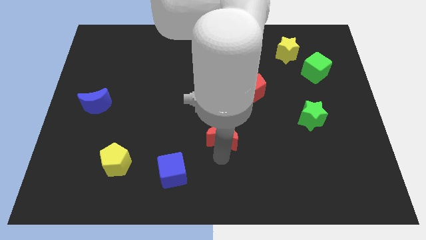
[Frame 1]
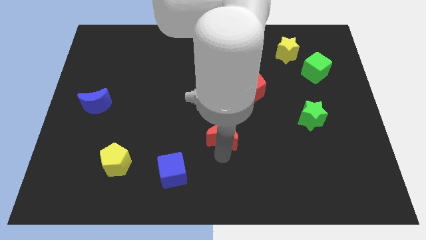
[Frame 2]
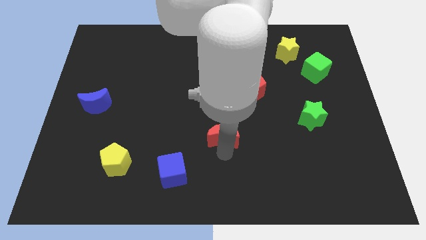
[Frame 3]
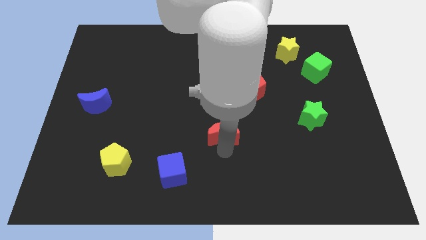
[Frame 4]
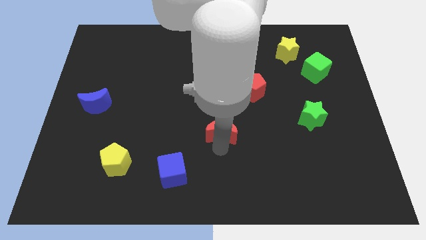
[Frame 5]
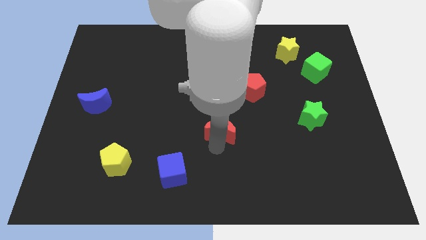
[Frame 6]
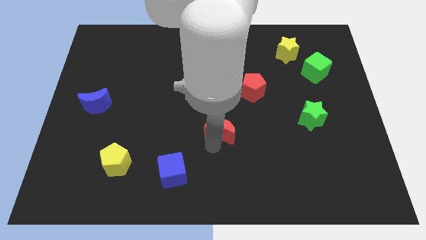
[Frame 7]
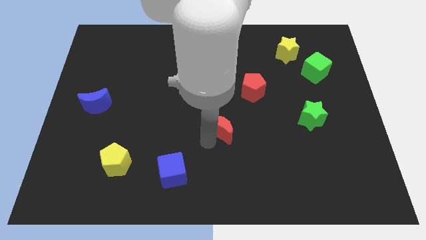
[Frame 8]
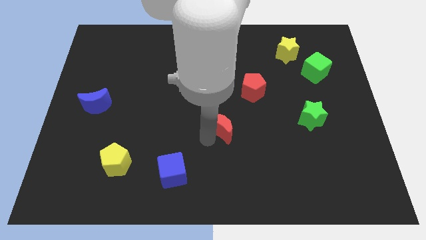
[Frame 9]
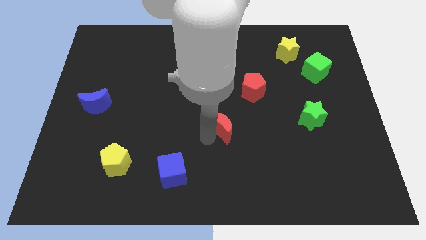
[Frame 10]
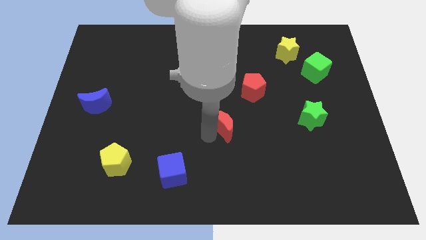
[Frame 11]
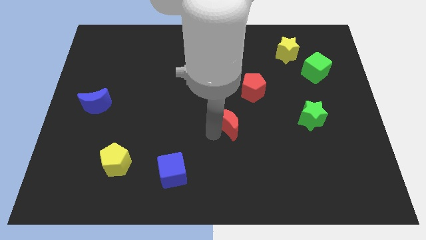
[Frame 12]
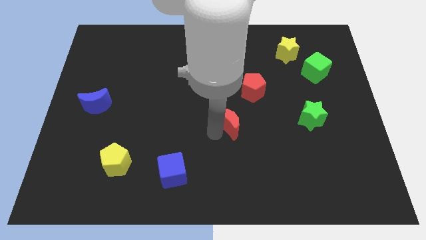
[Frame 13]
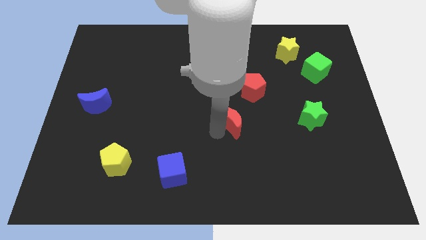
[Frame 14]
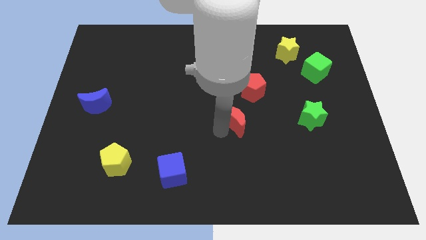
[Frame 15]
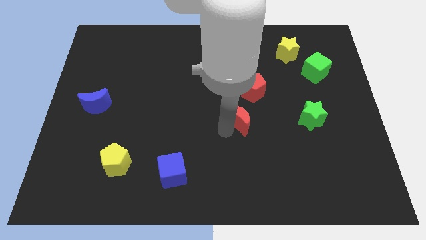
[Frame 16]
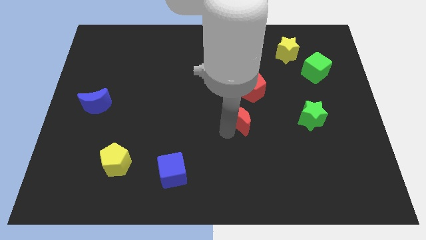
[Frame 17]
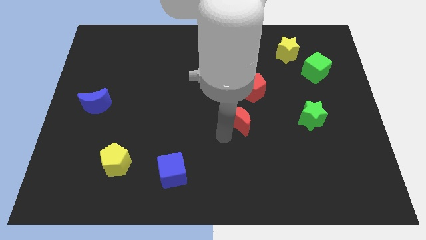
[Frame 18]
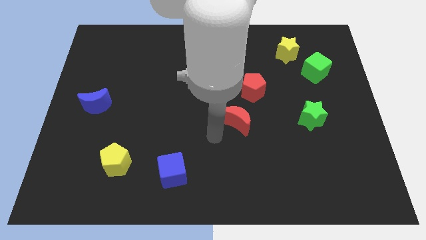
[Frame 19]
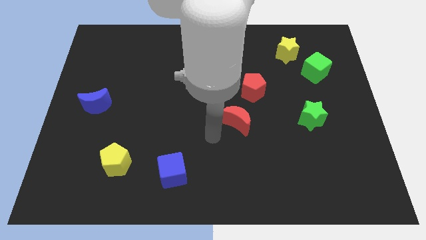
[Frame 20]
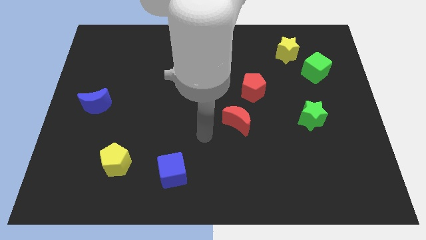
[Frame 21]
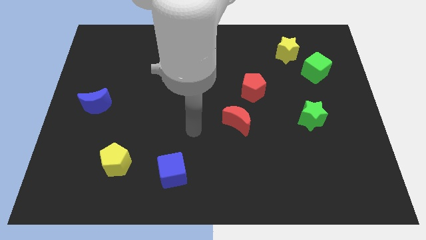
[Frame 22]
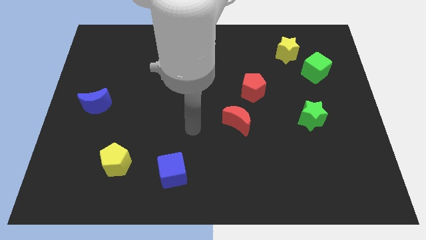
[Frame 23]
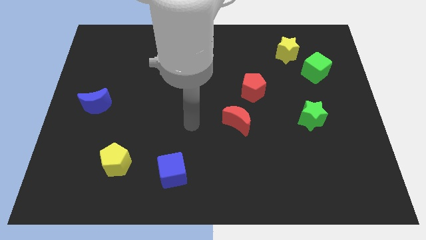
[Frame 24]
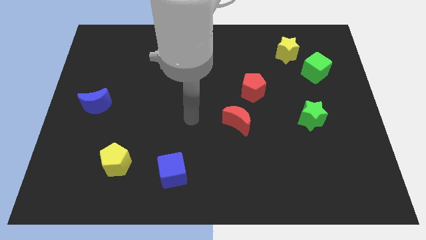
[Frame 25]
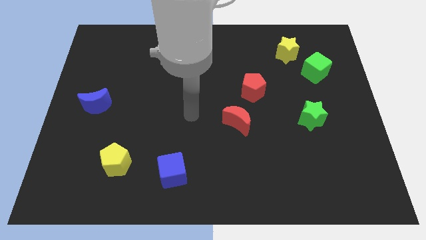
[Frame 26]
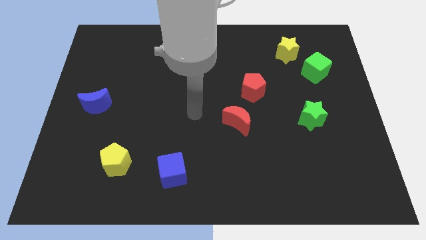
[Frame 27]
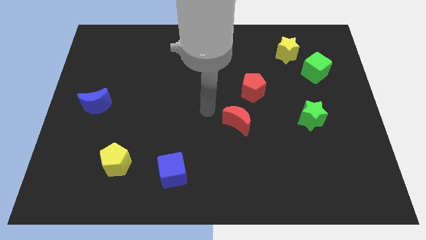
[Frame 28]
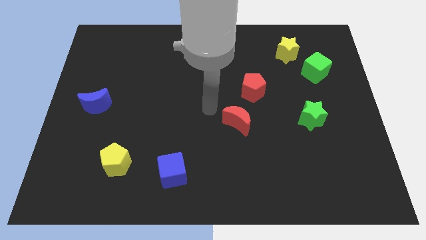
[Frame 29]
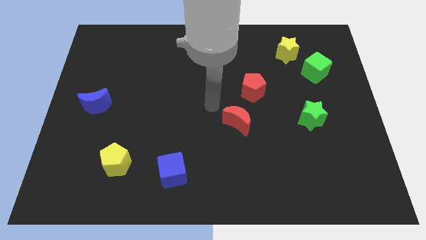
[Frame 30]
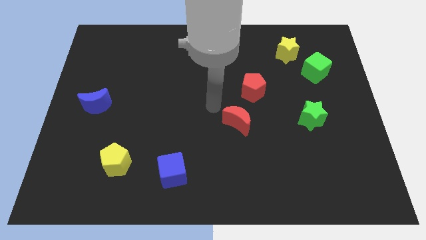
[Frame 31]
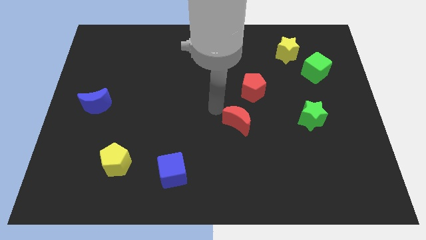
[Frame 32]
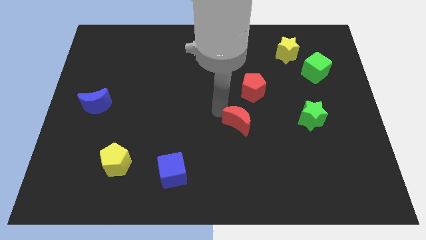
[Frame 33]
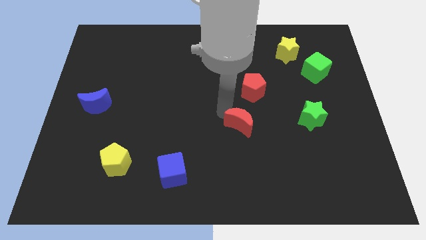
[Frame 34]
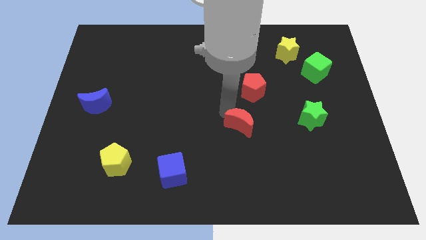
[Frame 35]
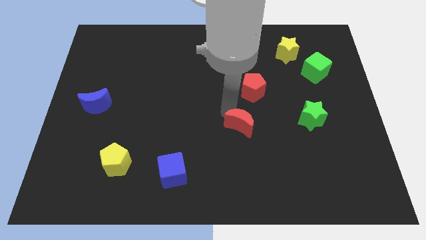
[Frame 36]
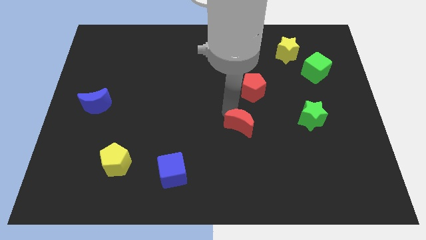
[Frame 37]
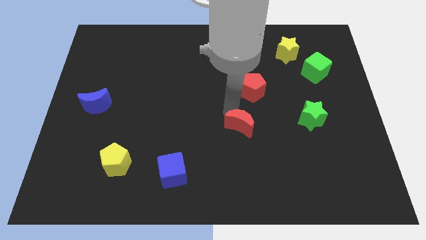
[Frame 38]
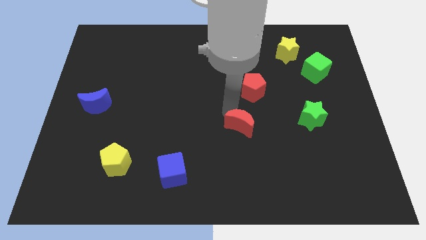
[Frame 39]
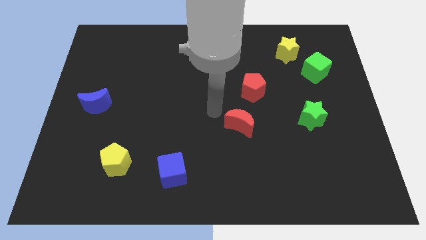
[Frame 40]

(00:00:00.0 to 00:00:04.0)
move red moon parallel to the green star

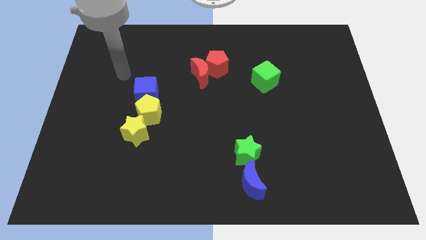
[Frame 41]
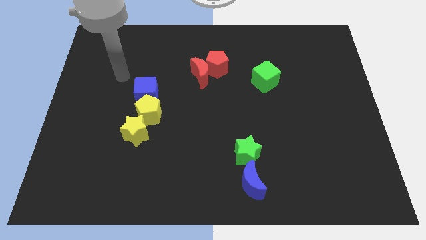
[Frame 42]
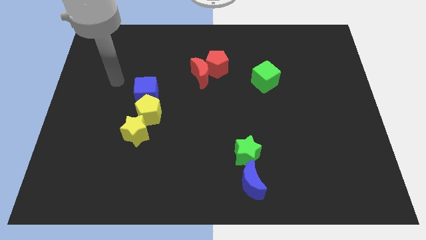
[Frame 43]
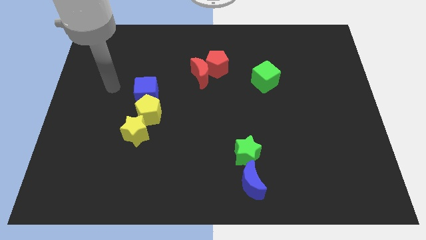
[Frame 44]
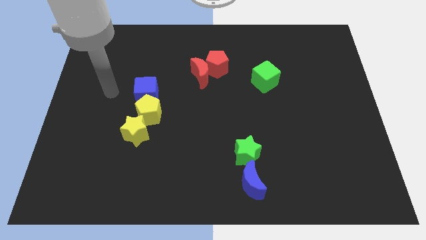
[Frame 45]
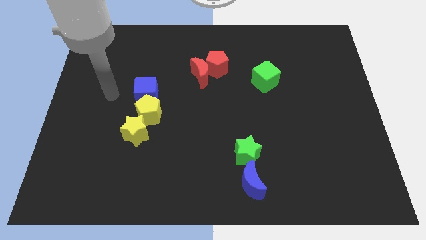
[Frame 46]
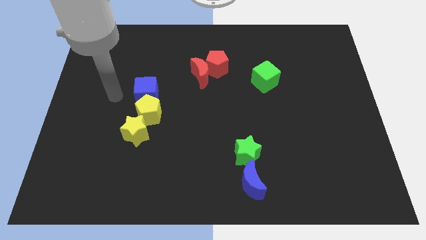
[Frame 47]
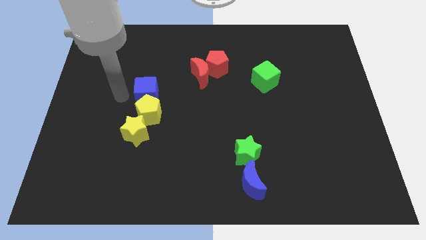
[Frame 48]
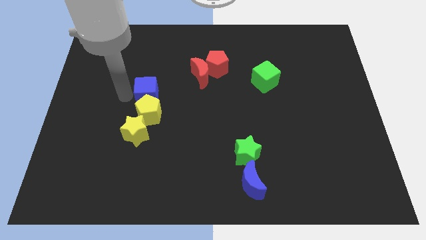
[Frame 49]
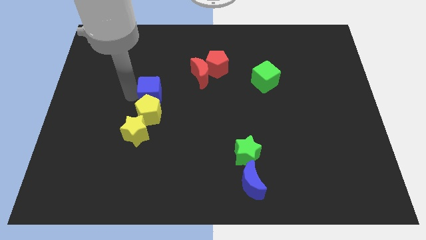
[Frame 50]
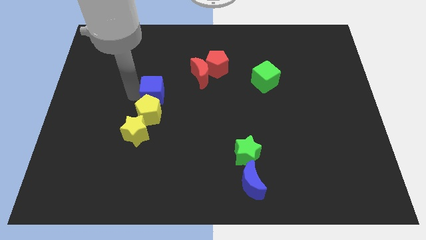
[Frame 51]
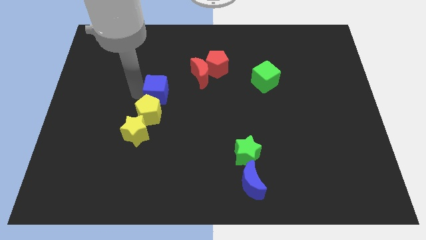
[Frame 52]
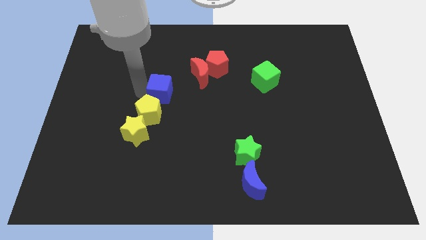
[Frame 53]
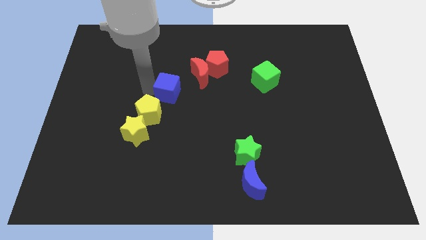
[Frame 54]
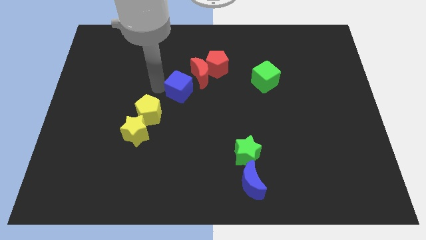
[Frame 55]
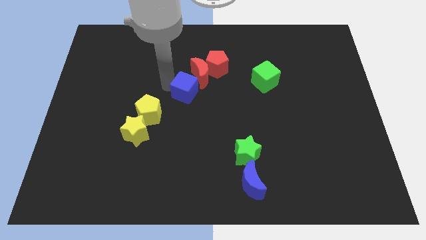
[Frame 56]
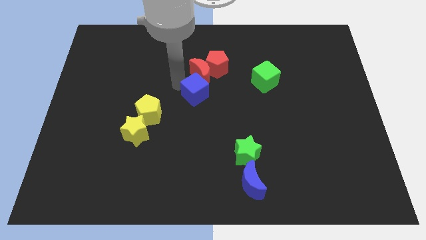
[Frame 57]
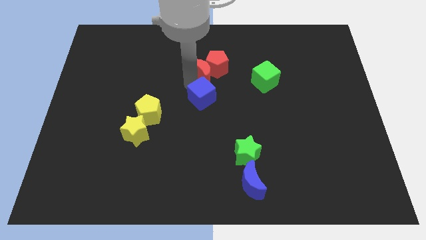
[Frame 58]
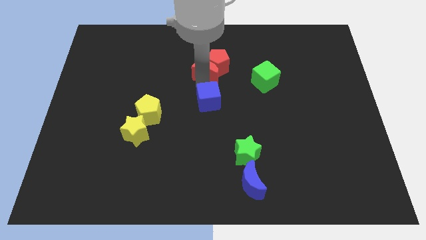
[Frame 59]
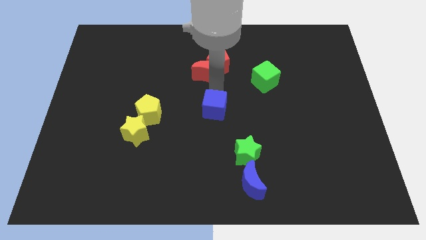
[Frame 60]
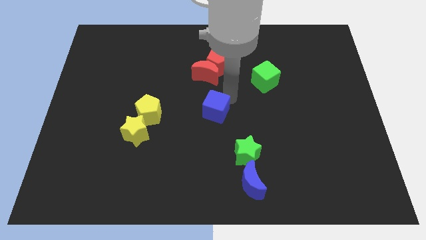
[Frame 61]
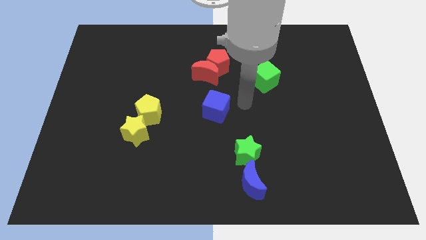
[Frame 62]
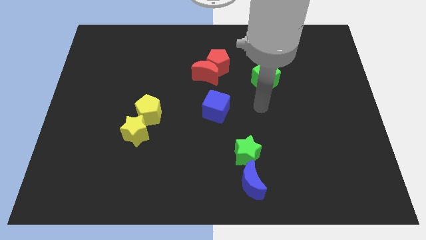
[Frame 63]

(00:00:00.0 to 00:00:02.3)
slide the blue cube to the center

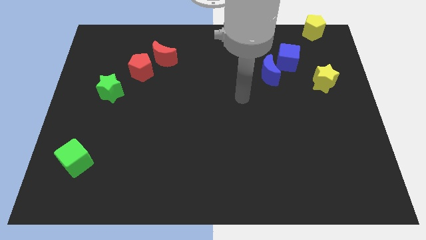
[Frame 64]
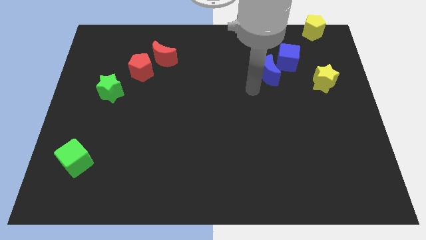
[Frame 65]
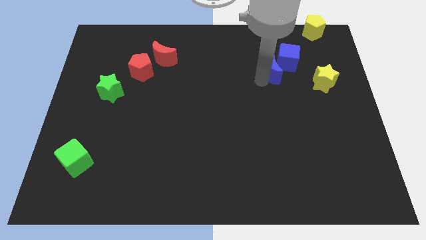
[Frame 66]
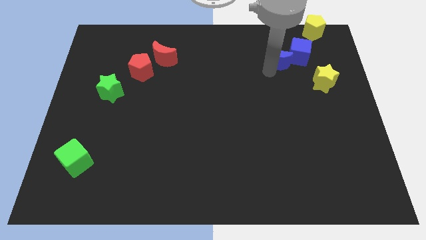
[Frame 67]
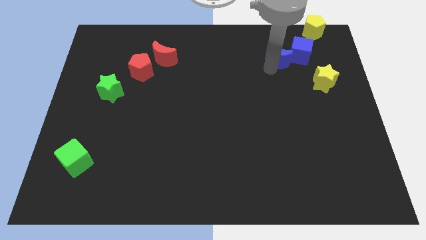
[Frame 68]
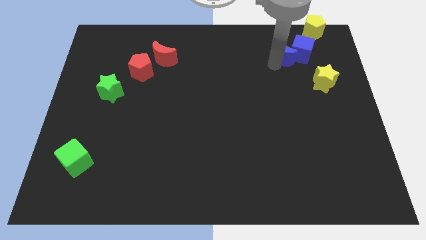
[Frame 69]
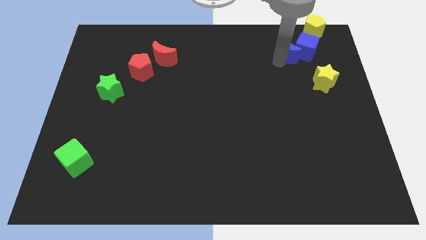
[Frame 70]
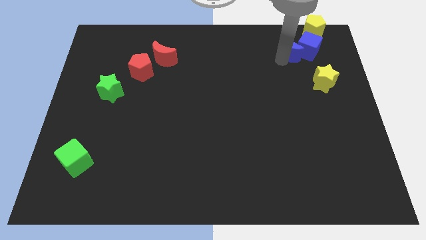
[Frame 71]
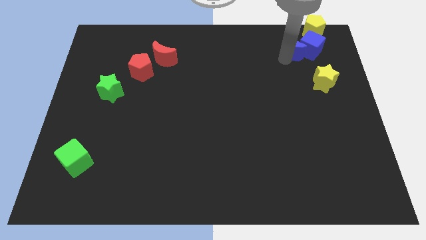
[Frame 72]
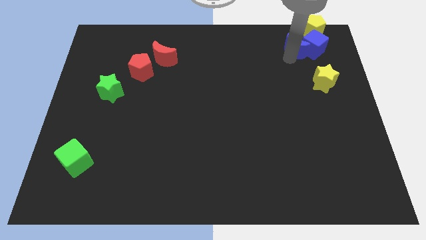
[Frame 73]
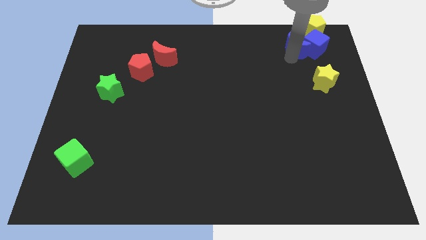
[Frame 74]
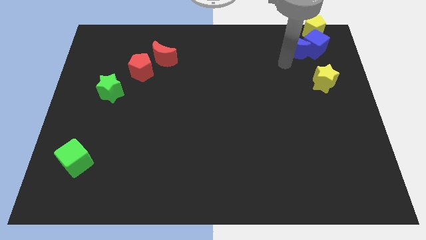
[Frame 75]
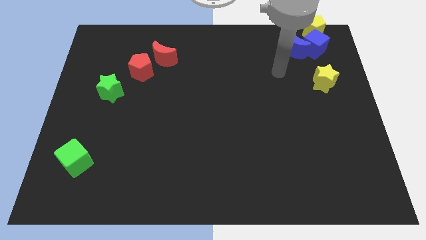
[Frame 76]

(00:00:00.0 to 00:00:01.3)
push the group of blue blocks into the bottom side of the yellow pentagon

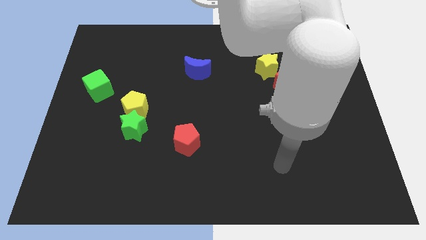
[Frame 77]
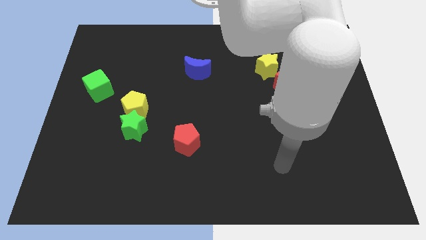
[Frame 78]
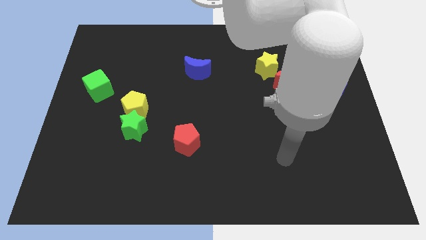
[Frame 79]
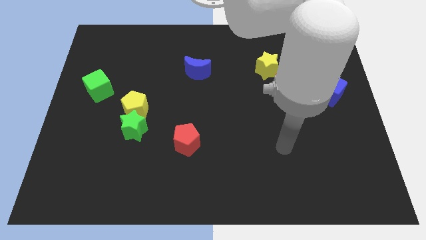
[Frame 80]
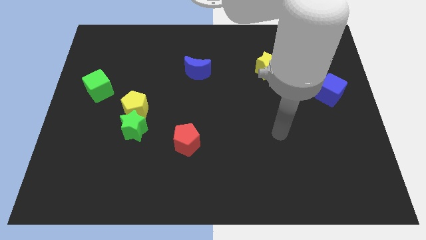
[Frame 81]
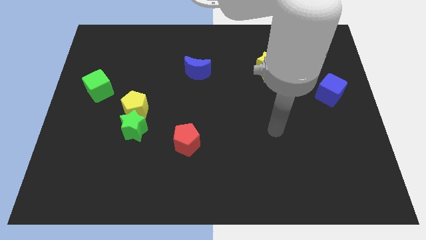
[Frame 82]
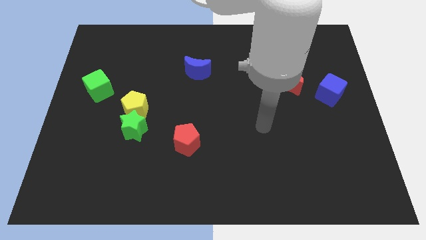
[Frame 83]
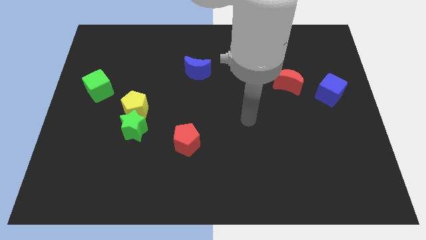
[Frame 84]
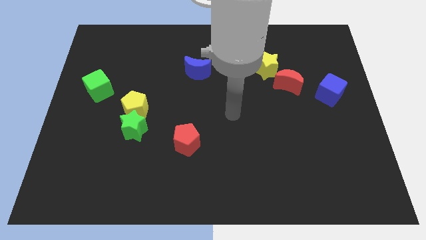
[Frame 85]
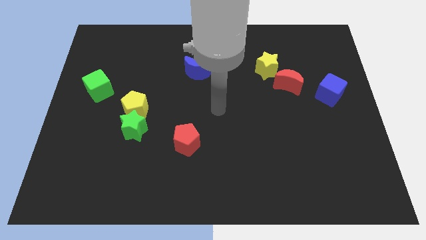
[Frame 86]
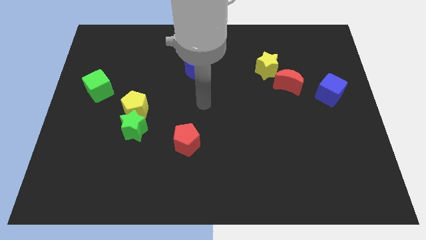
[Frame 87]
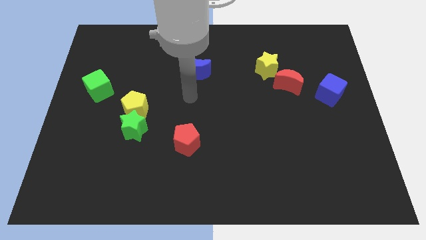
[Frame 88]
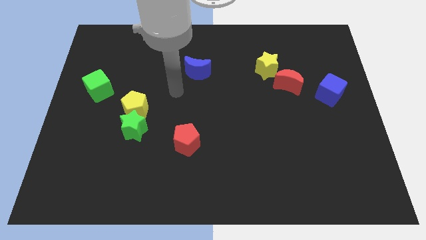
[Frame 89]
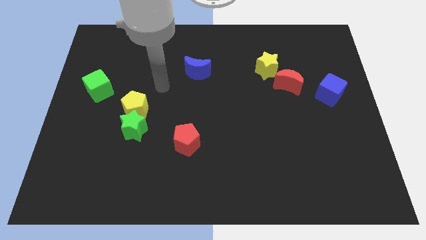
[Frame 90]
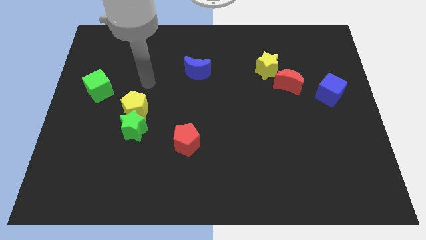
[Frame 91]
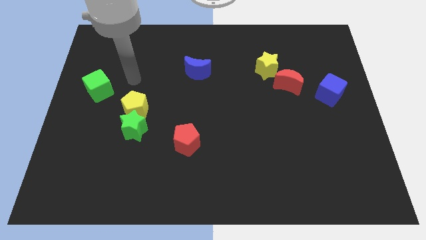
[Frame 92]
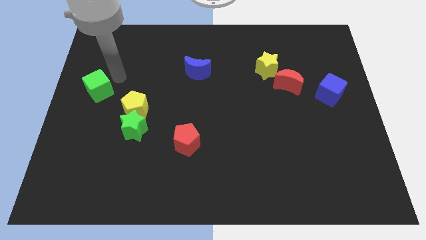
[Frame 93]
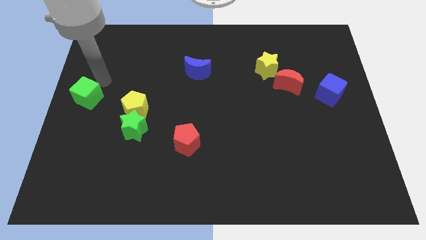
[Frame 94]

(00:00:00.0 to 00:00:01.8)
place the arm close to the green cube
